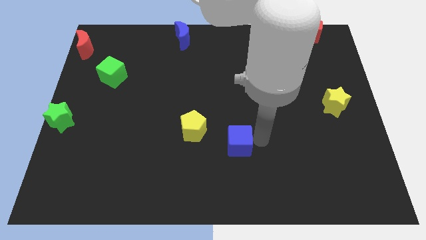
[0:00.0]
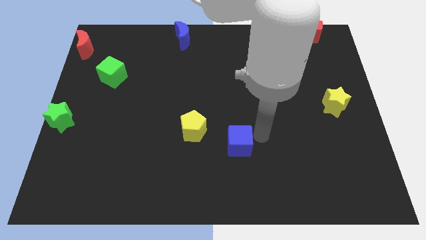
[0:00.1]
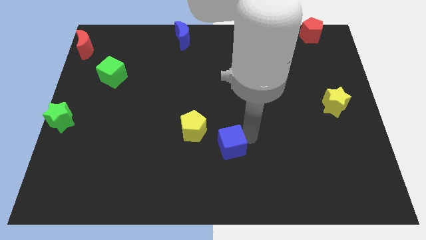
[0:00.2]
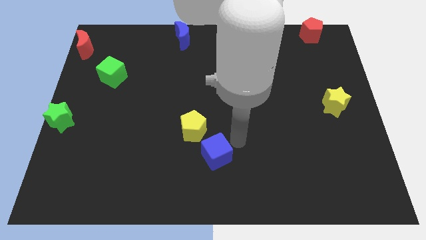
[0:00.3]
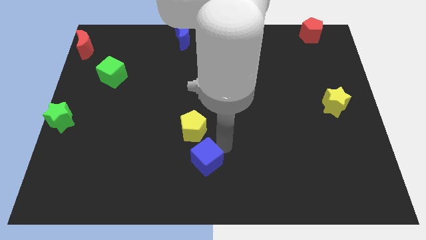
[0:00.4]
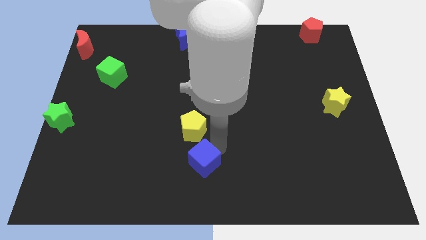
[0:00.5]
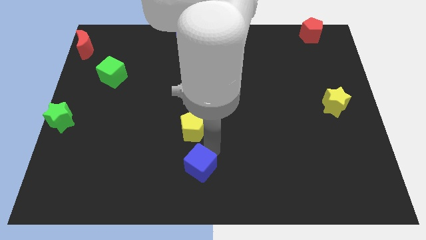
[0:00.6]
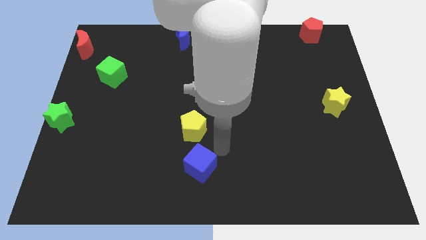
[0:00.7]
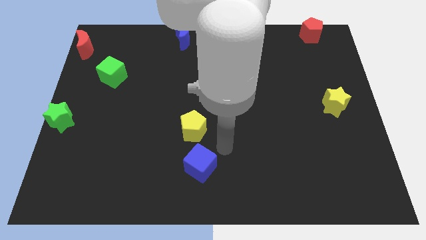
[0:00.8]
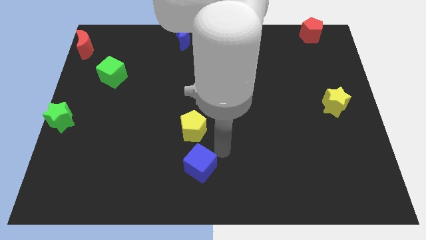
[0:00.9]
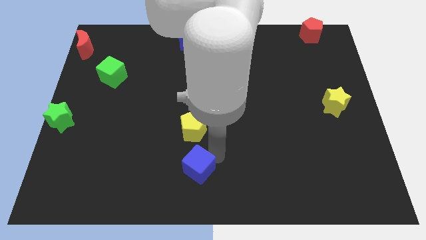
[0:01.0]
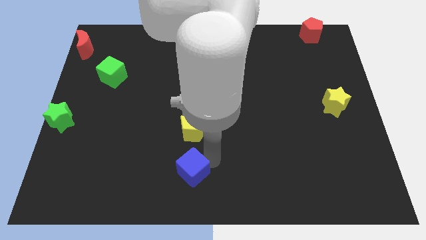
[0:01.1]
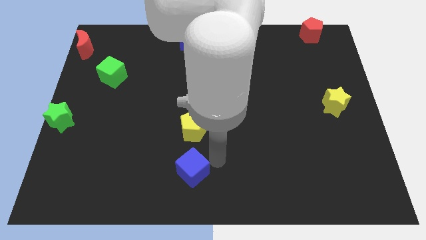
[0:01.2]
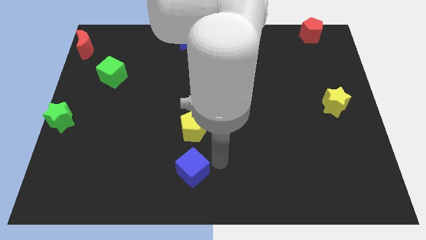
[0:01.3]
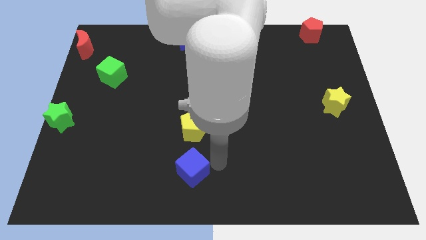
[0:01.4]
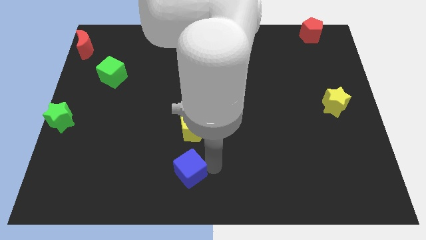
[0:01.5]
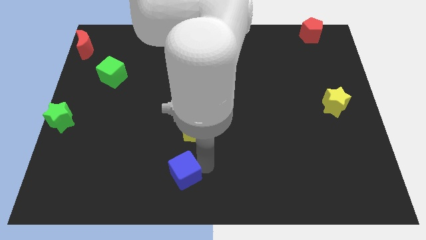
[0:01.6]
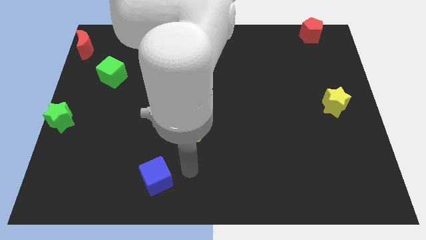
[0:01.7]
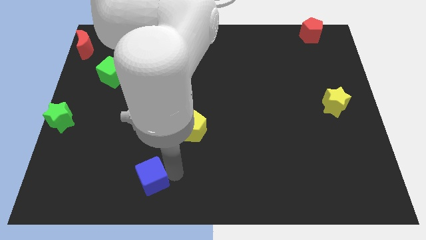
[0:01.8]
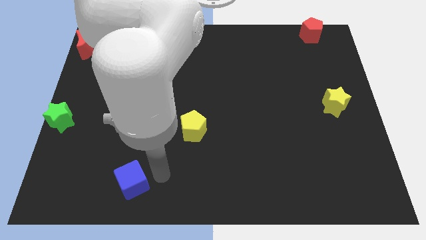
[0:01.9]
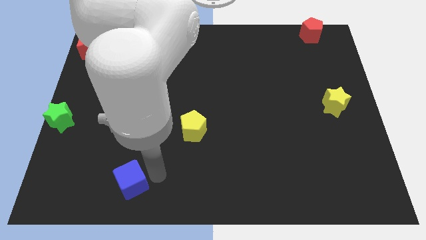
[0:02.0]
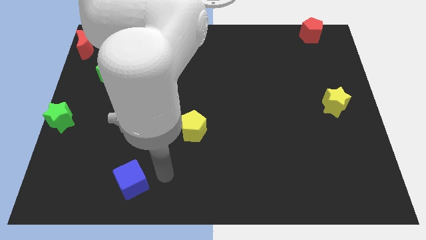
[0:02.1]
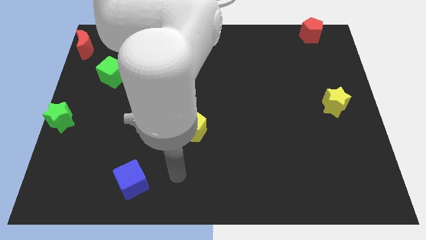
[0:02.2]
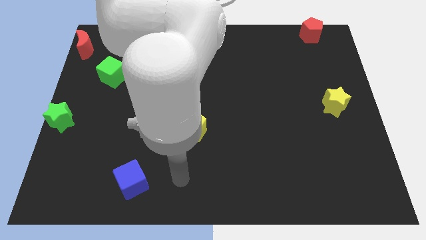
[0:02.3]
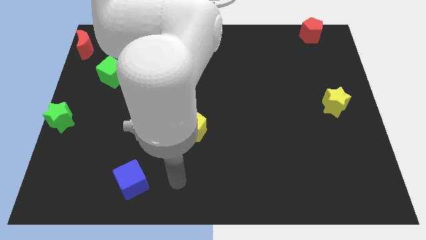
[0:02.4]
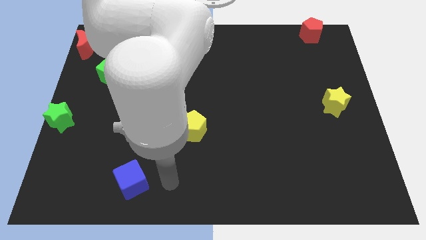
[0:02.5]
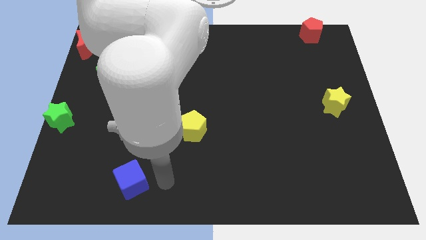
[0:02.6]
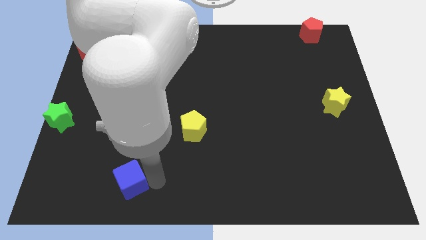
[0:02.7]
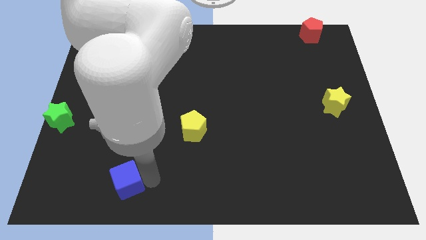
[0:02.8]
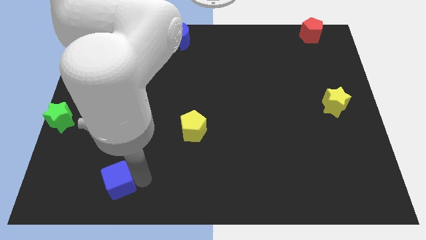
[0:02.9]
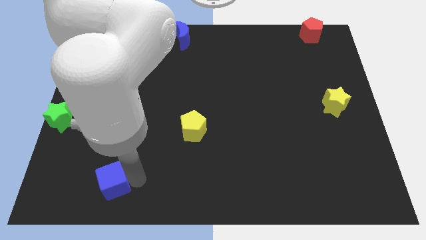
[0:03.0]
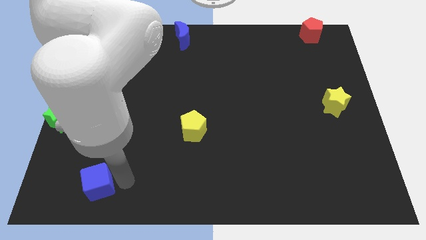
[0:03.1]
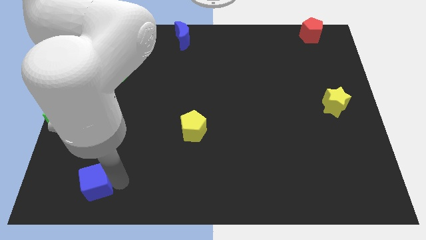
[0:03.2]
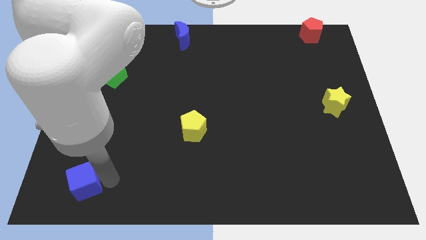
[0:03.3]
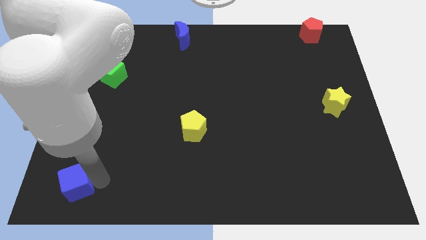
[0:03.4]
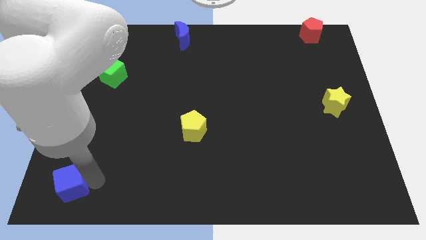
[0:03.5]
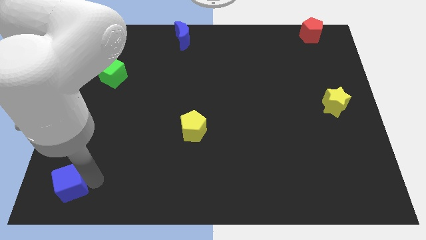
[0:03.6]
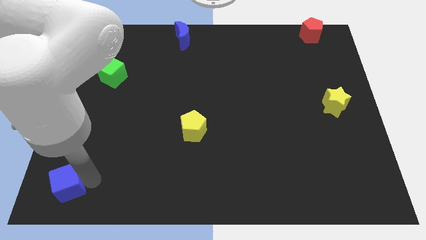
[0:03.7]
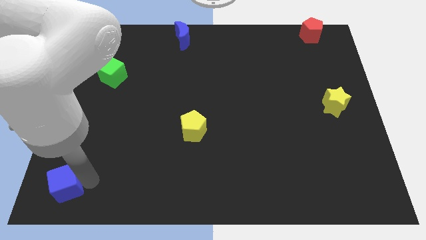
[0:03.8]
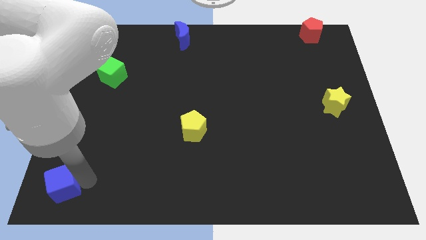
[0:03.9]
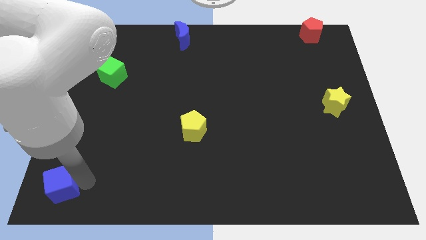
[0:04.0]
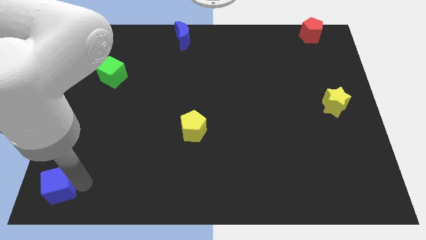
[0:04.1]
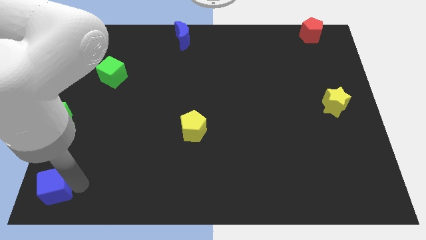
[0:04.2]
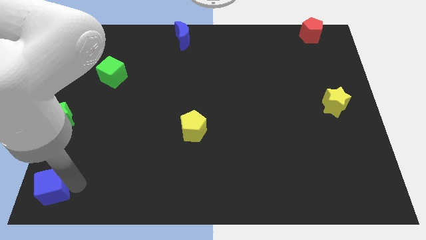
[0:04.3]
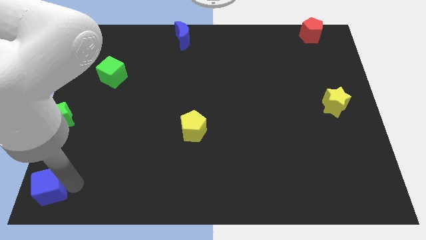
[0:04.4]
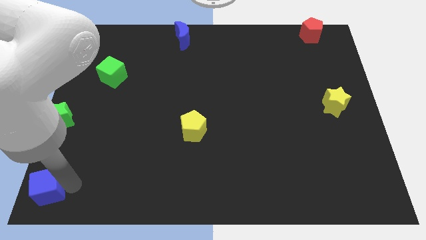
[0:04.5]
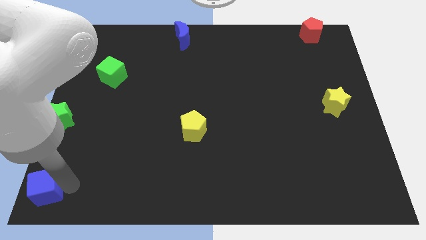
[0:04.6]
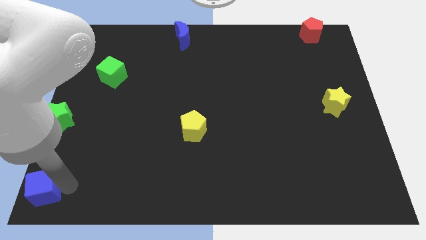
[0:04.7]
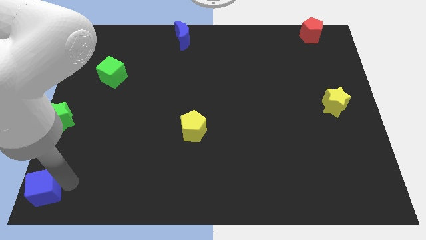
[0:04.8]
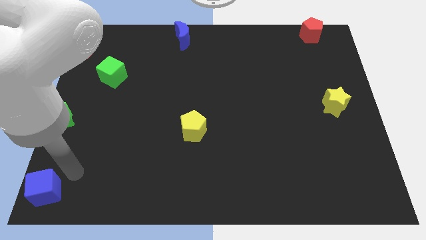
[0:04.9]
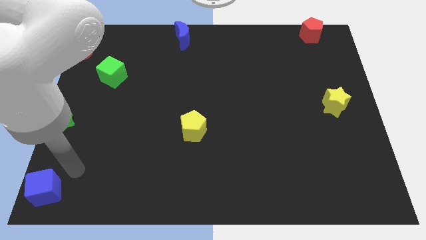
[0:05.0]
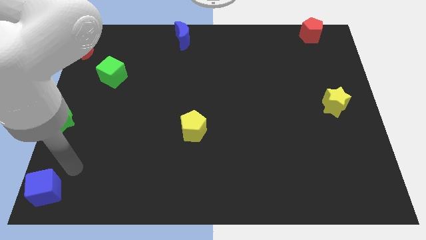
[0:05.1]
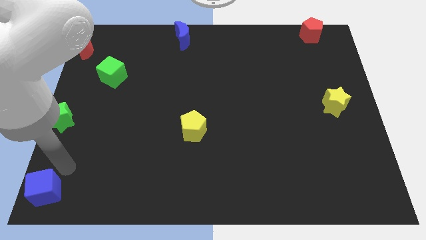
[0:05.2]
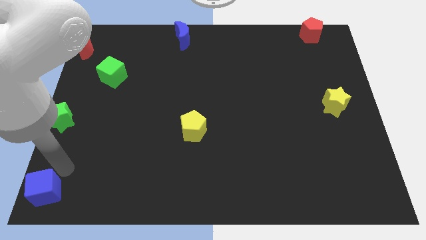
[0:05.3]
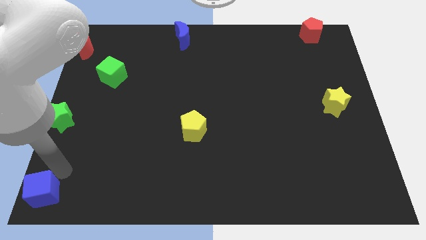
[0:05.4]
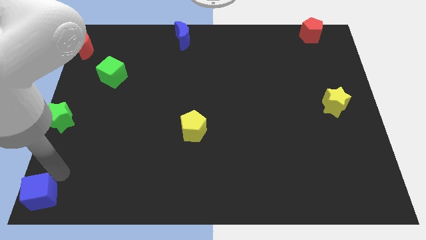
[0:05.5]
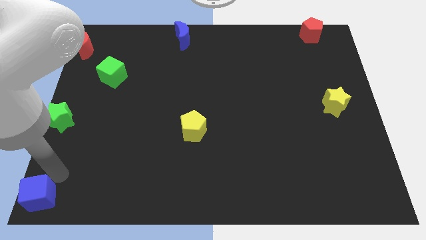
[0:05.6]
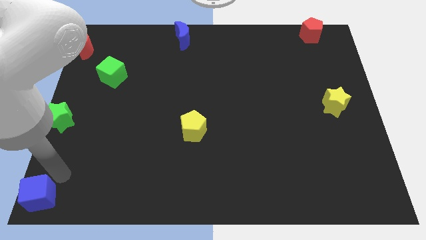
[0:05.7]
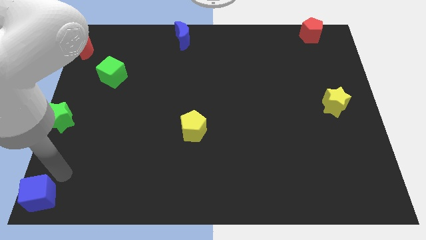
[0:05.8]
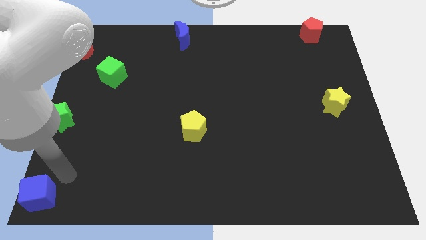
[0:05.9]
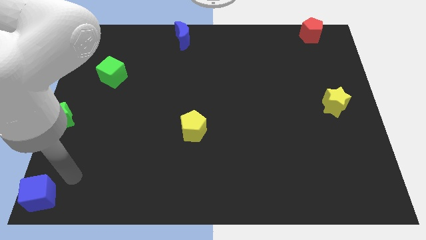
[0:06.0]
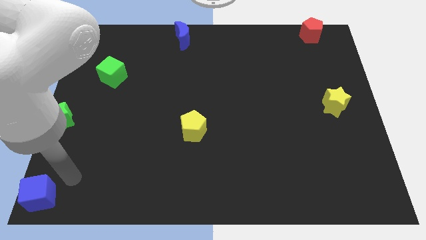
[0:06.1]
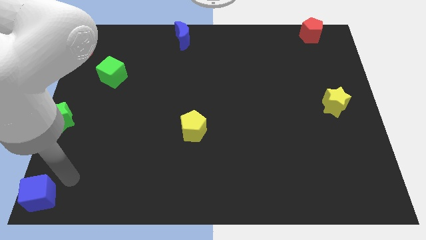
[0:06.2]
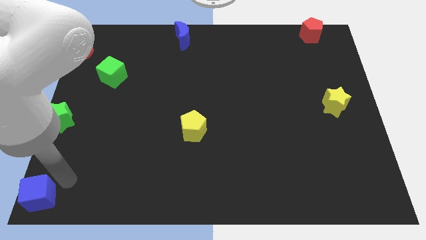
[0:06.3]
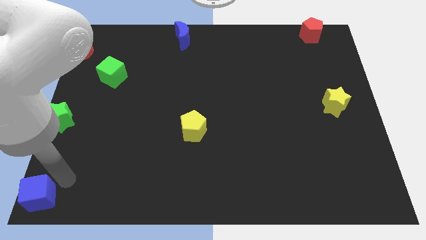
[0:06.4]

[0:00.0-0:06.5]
place the blue cube below the green star

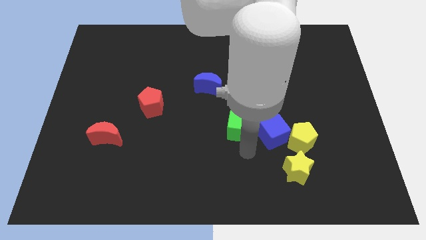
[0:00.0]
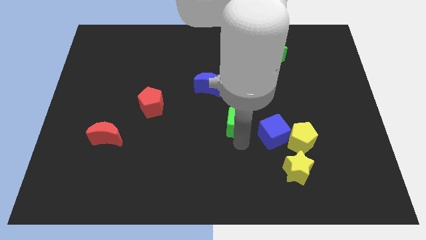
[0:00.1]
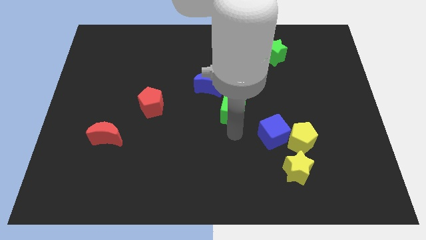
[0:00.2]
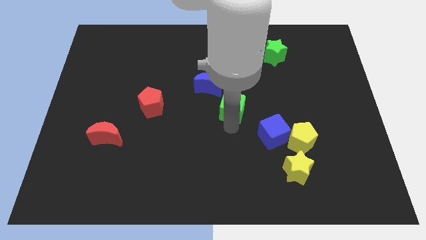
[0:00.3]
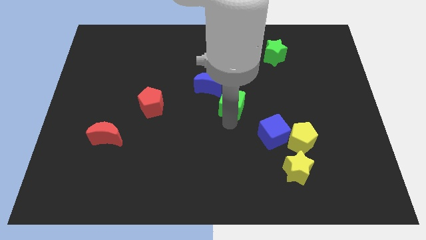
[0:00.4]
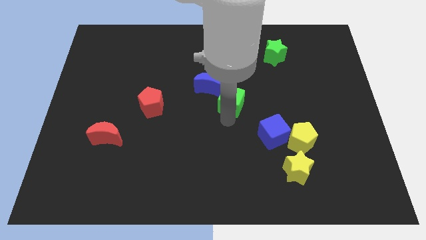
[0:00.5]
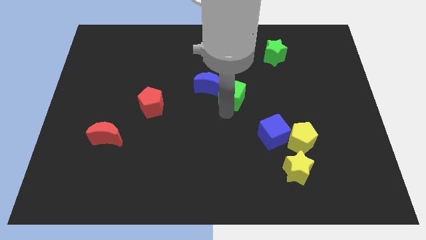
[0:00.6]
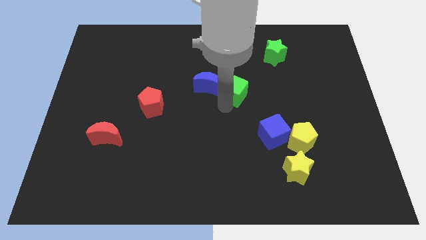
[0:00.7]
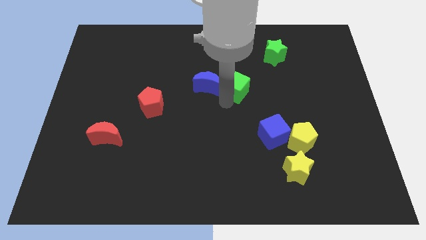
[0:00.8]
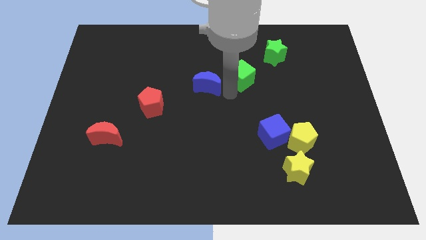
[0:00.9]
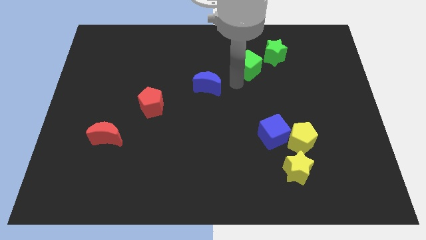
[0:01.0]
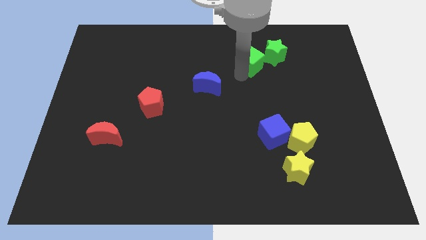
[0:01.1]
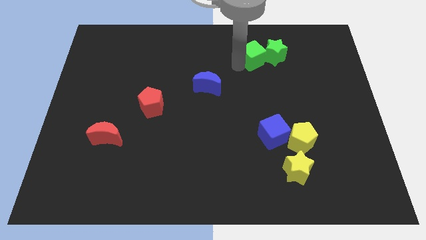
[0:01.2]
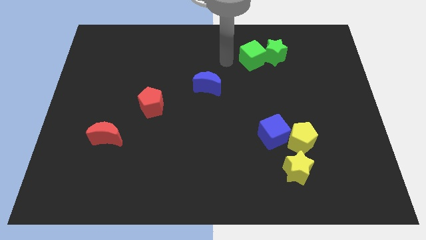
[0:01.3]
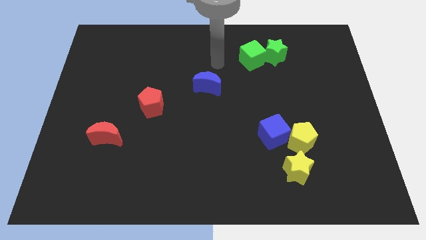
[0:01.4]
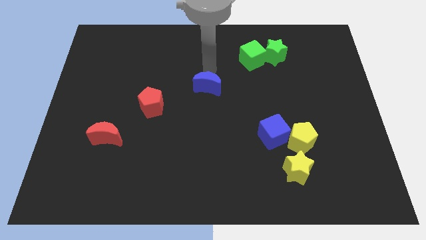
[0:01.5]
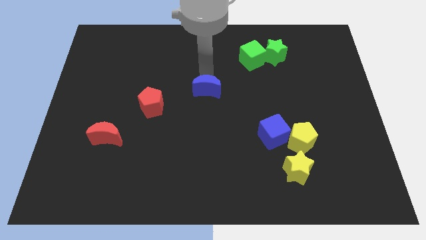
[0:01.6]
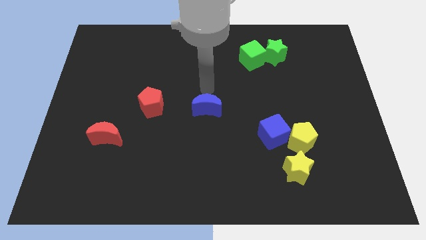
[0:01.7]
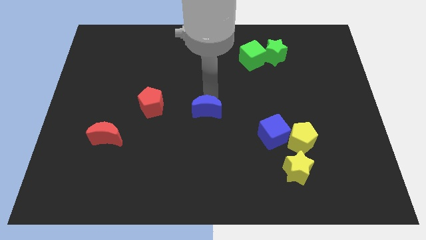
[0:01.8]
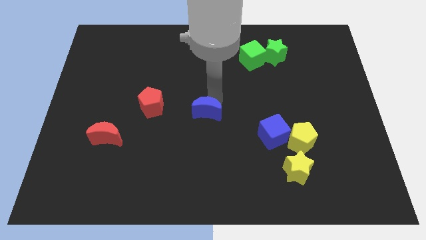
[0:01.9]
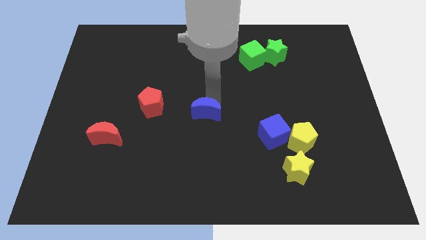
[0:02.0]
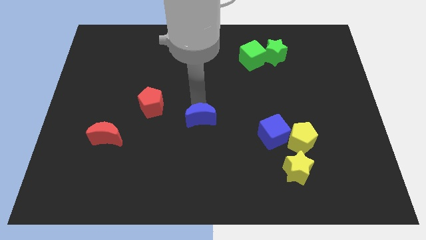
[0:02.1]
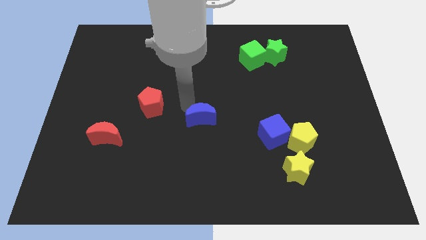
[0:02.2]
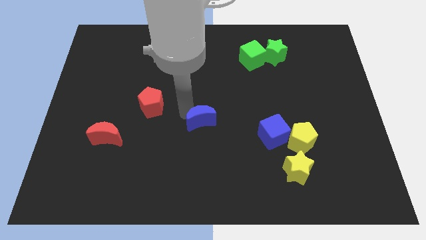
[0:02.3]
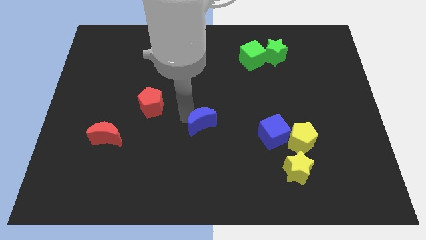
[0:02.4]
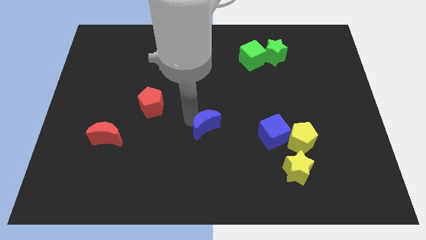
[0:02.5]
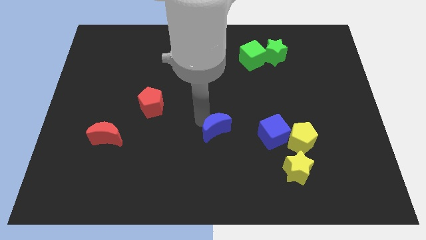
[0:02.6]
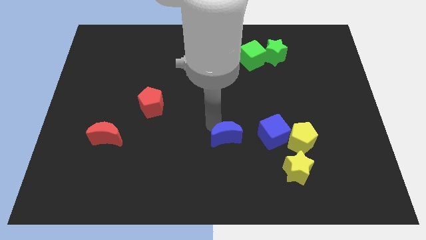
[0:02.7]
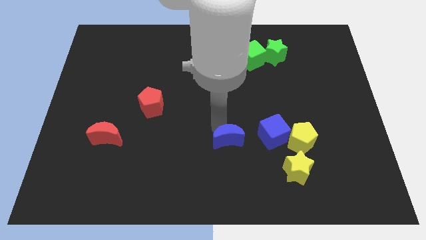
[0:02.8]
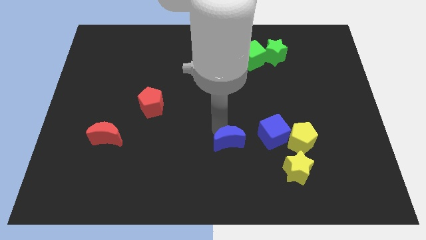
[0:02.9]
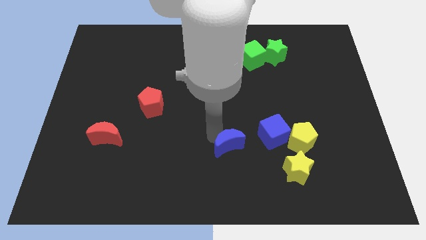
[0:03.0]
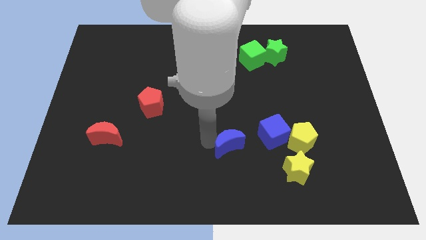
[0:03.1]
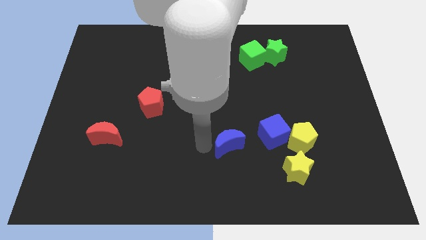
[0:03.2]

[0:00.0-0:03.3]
place the blue moon to the left side of the blue cube
